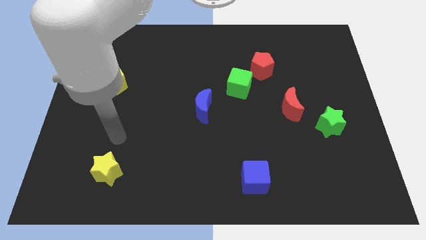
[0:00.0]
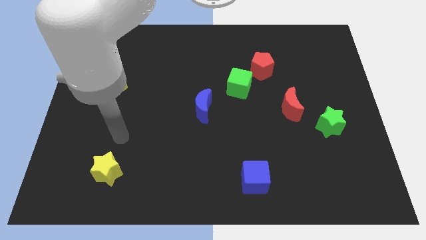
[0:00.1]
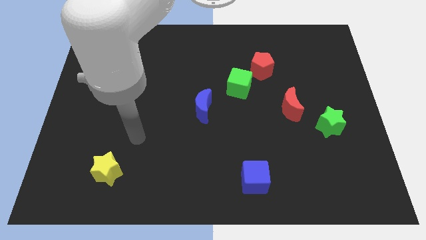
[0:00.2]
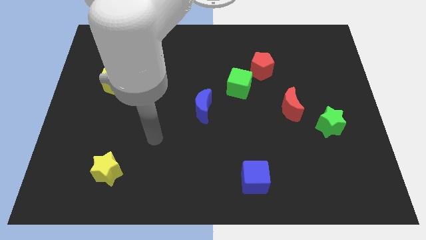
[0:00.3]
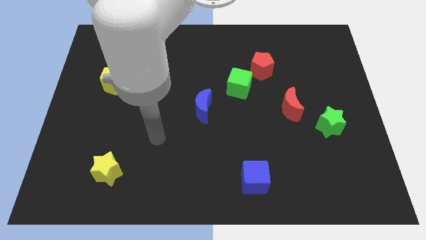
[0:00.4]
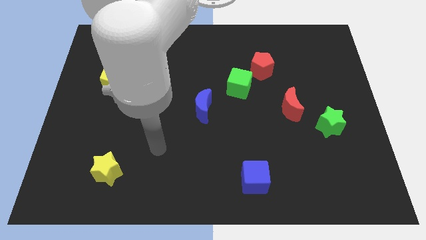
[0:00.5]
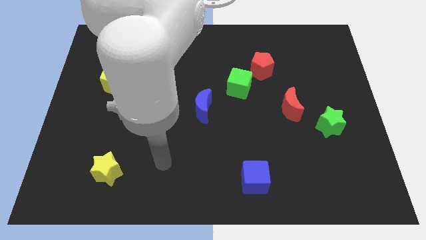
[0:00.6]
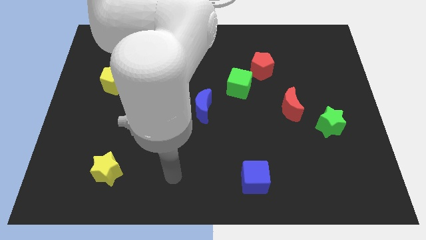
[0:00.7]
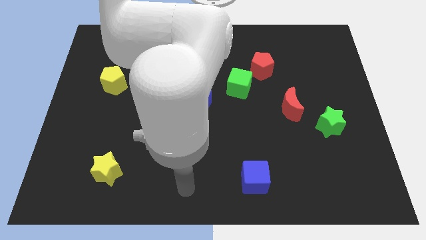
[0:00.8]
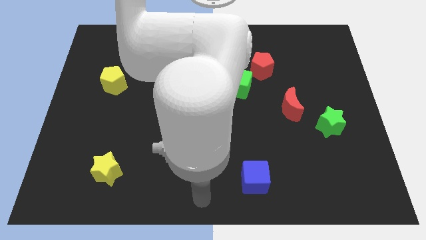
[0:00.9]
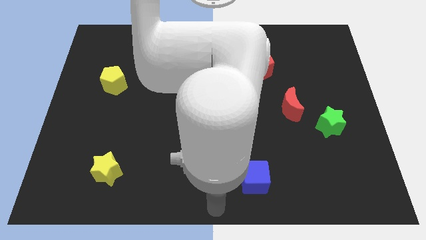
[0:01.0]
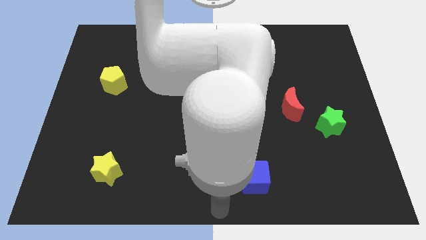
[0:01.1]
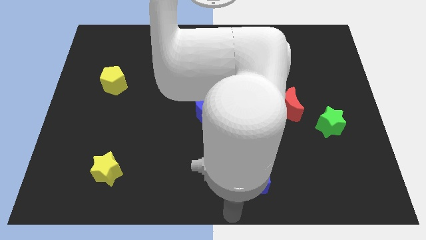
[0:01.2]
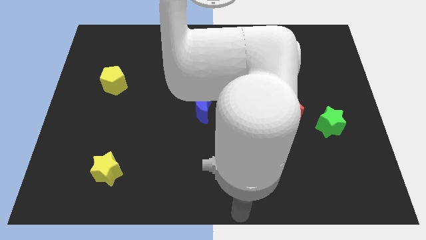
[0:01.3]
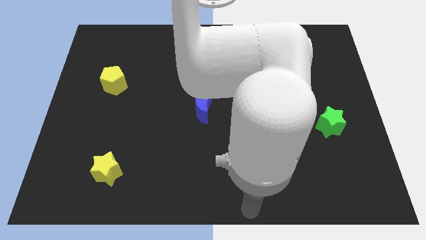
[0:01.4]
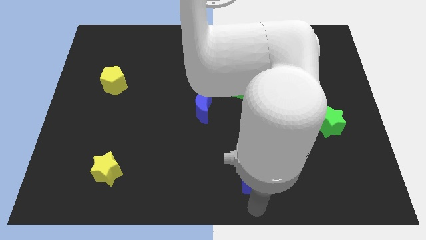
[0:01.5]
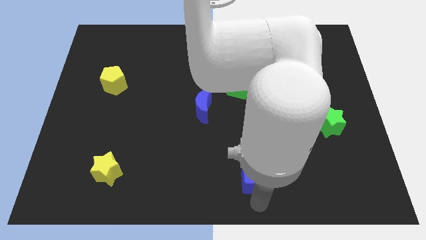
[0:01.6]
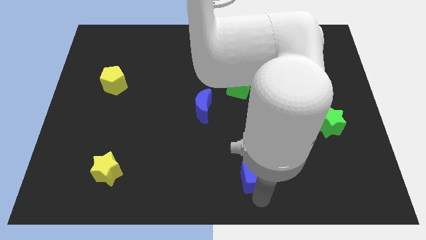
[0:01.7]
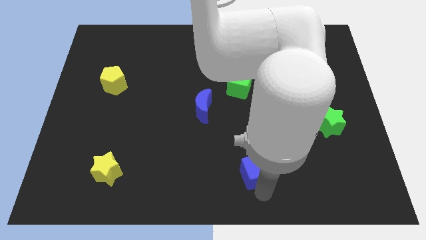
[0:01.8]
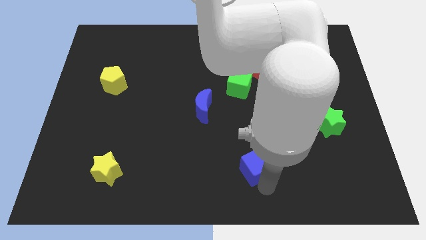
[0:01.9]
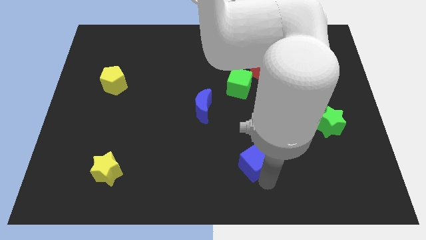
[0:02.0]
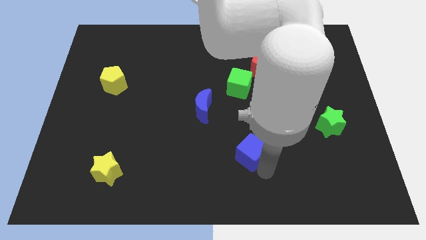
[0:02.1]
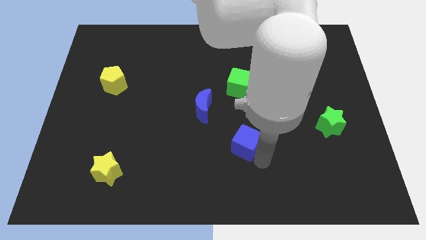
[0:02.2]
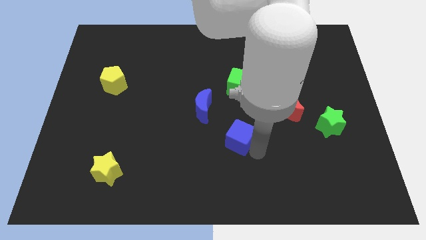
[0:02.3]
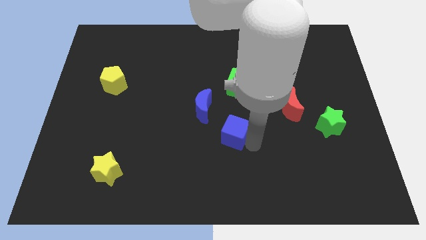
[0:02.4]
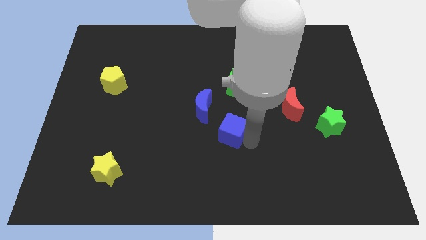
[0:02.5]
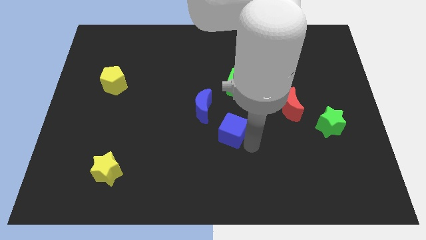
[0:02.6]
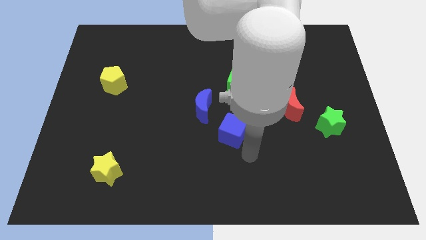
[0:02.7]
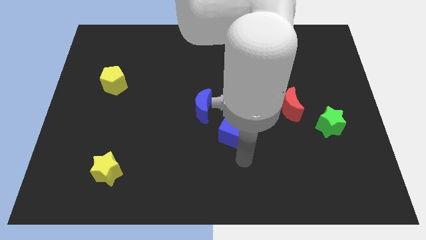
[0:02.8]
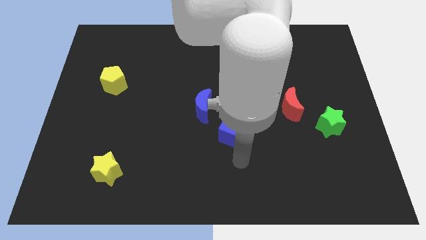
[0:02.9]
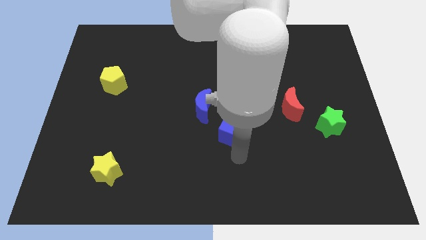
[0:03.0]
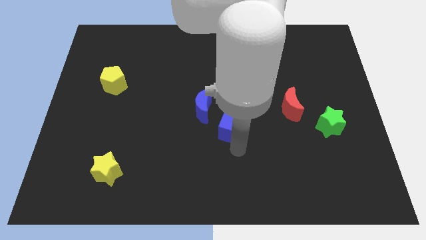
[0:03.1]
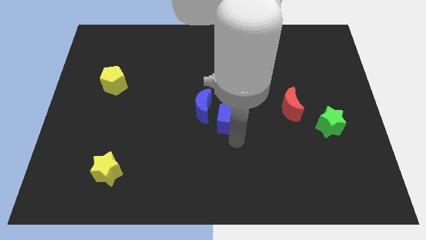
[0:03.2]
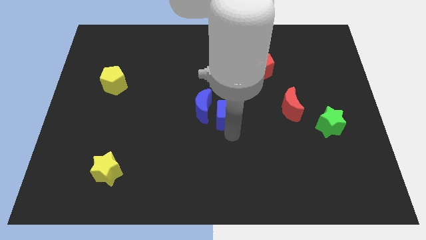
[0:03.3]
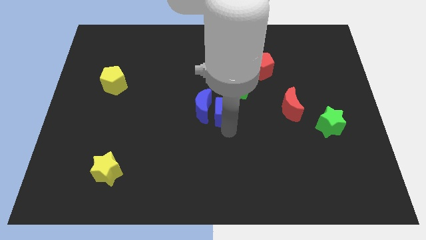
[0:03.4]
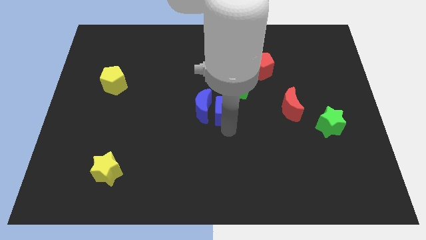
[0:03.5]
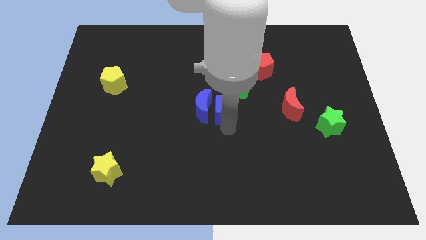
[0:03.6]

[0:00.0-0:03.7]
place the blue cube below the green cube

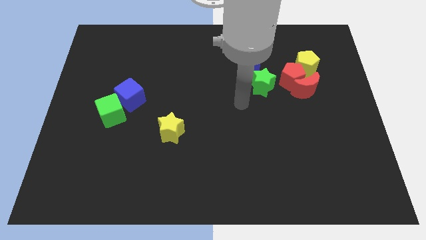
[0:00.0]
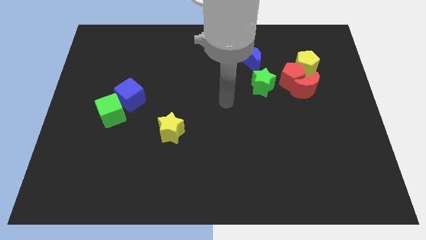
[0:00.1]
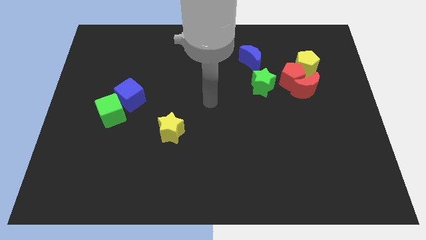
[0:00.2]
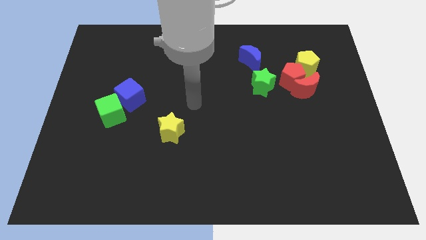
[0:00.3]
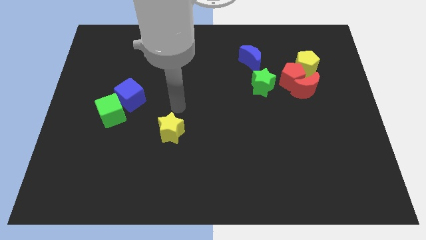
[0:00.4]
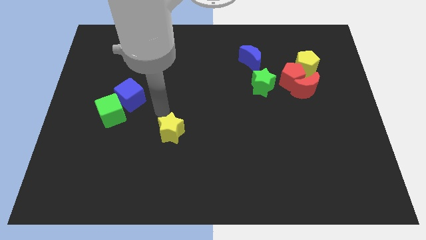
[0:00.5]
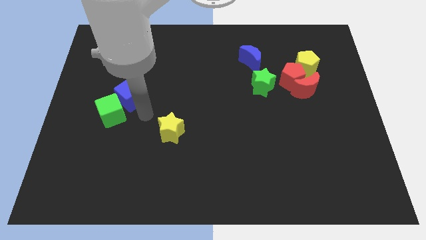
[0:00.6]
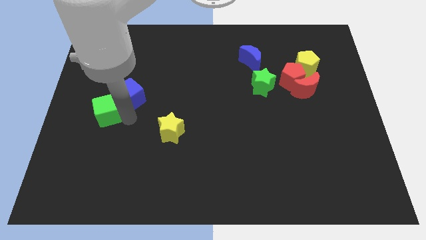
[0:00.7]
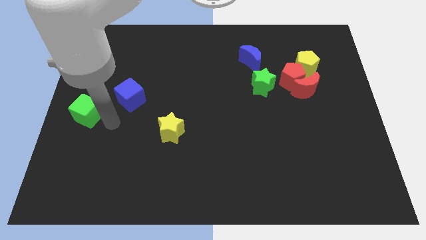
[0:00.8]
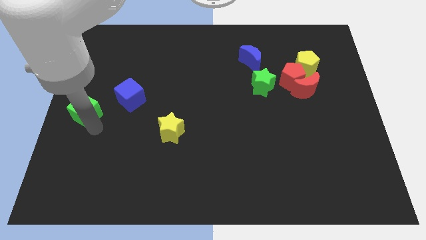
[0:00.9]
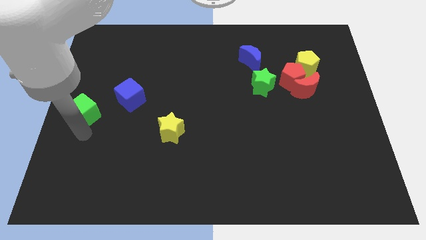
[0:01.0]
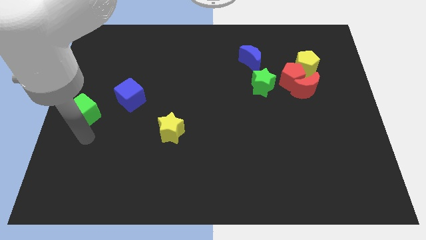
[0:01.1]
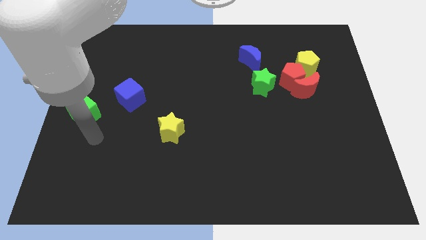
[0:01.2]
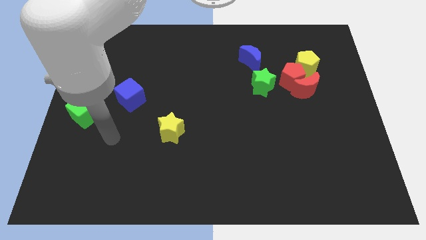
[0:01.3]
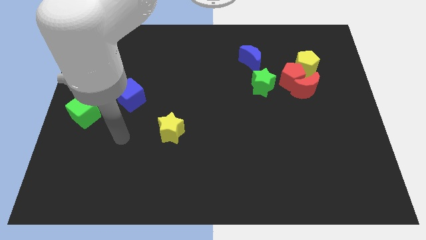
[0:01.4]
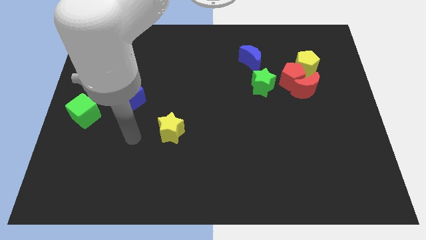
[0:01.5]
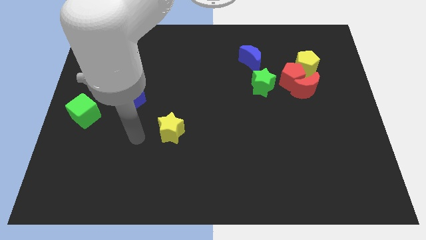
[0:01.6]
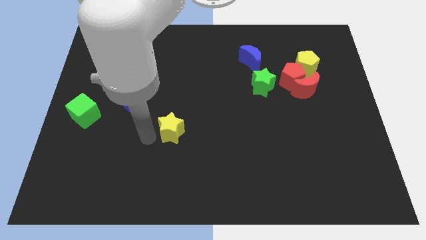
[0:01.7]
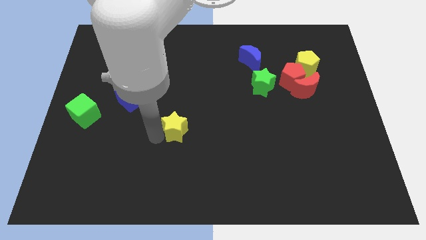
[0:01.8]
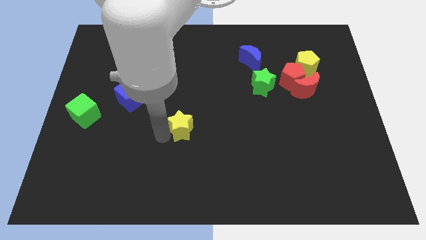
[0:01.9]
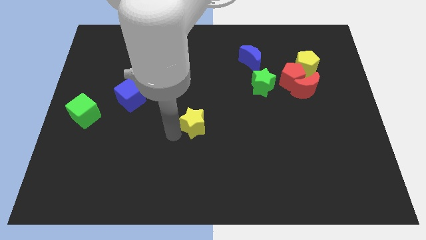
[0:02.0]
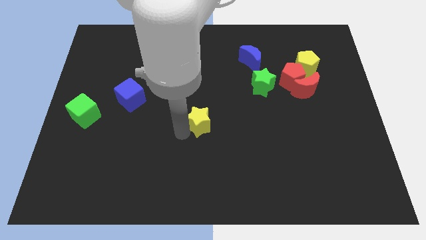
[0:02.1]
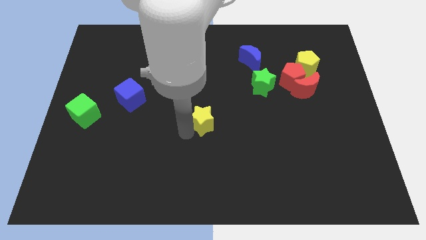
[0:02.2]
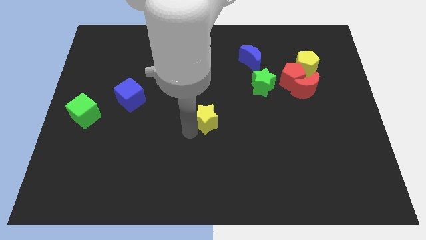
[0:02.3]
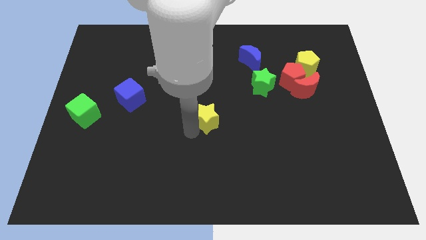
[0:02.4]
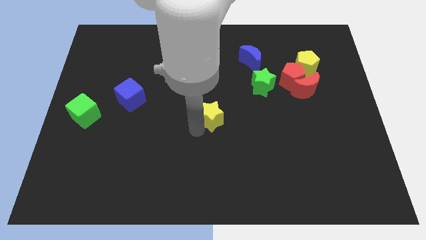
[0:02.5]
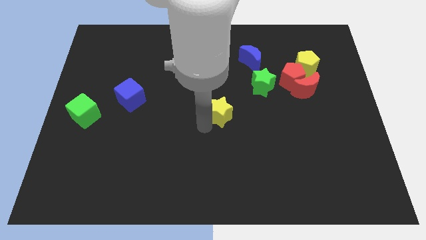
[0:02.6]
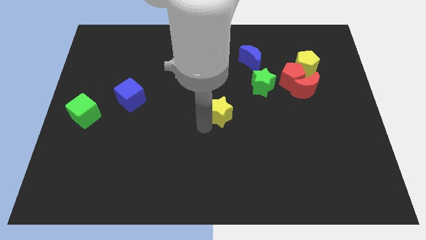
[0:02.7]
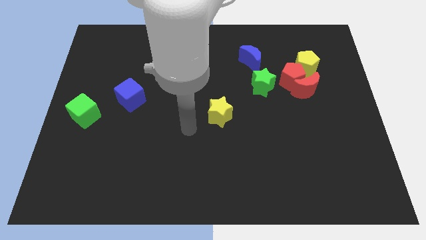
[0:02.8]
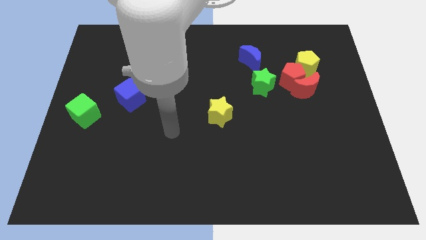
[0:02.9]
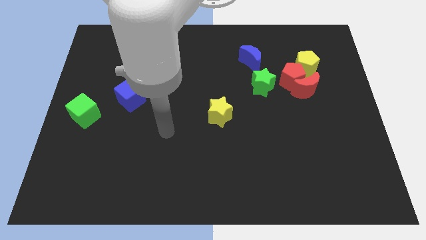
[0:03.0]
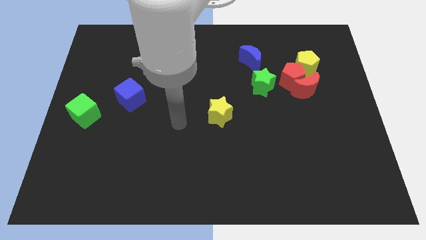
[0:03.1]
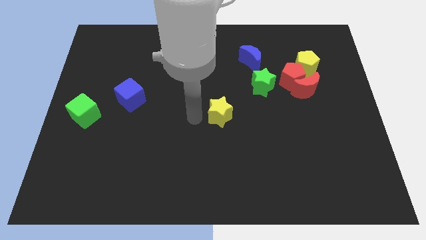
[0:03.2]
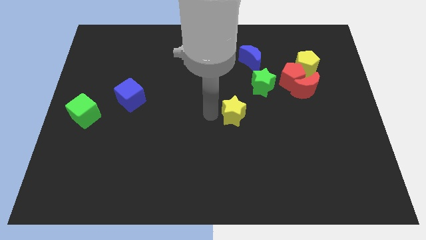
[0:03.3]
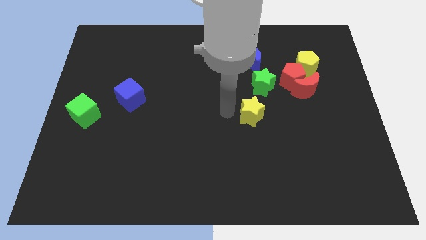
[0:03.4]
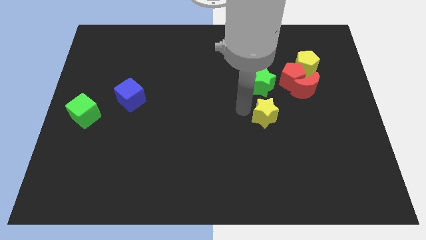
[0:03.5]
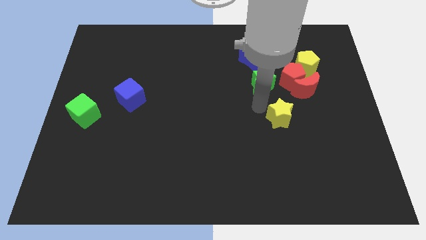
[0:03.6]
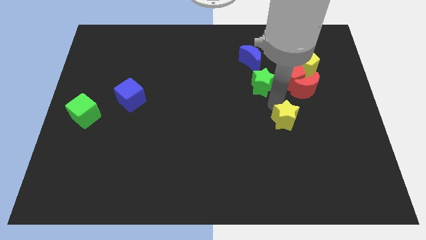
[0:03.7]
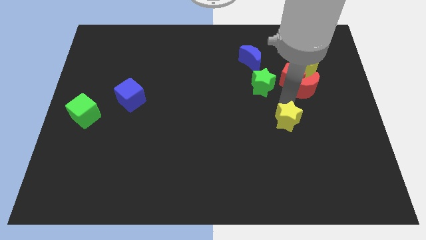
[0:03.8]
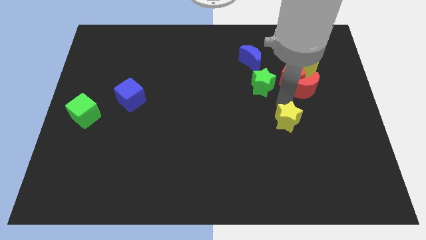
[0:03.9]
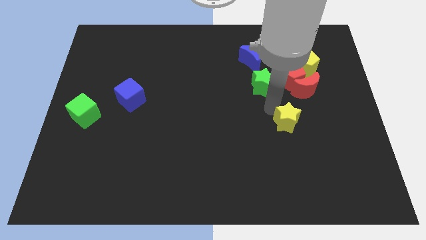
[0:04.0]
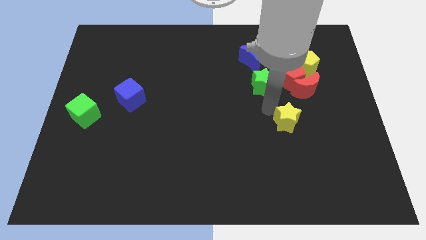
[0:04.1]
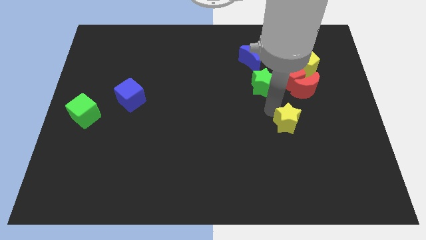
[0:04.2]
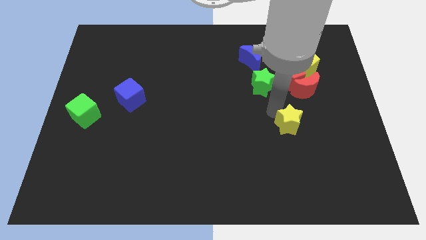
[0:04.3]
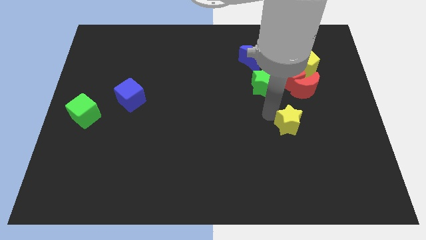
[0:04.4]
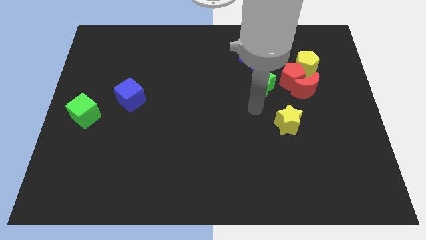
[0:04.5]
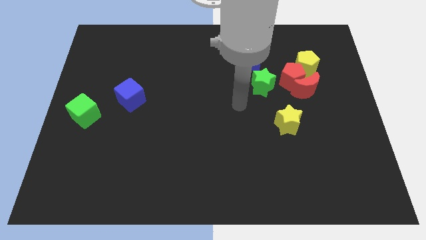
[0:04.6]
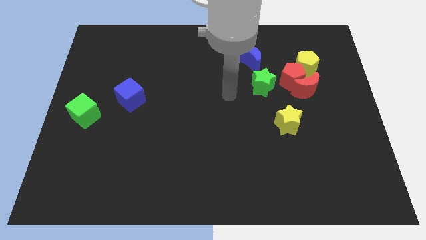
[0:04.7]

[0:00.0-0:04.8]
place the yelow star diagonally to the green star

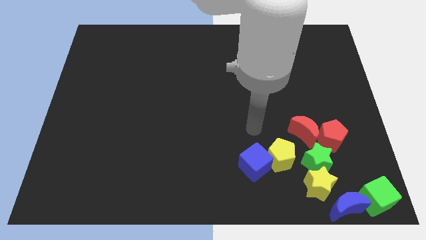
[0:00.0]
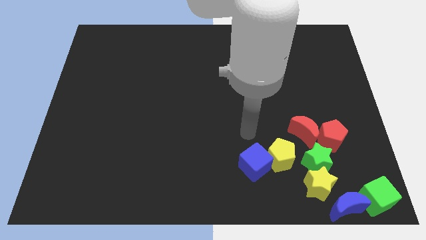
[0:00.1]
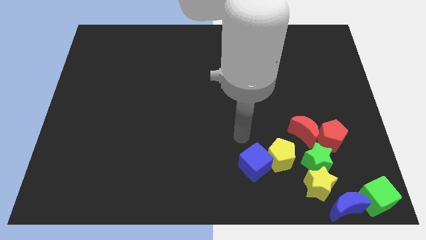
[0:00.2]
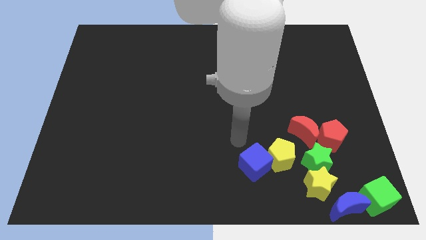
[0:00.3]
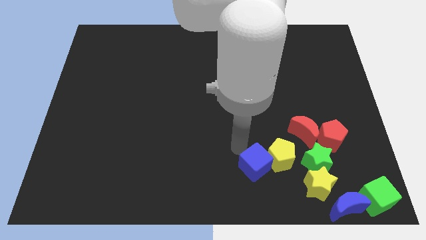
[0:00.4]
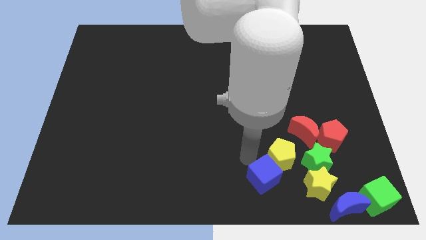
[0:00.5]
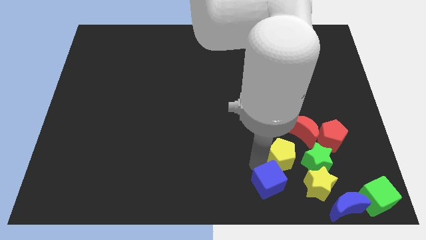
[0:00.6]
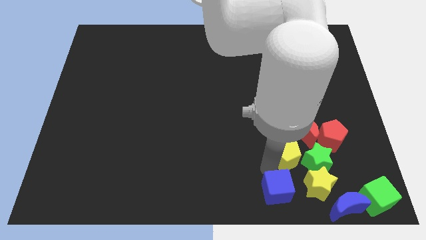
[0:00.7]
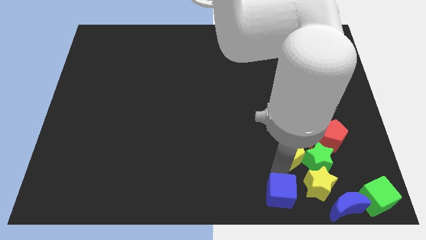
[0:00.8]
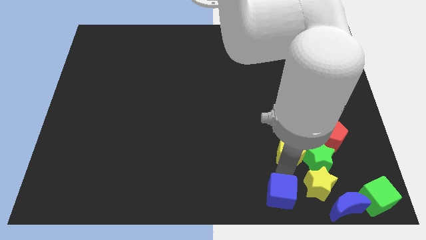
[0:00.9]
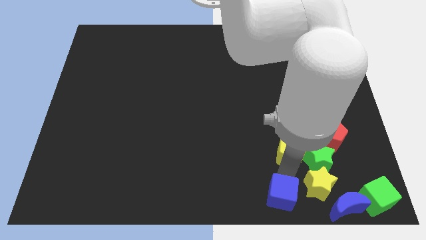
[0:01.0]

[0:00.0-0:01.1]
move blue cube to the left of yellow star
